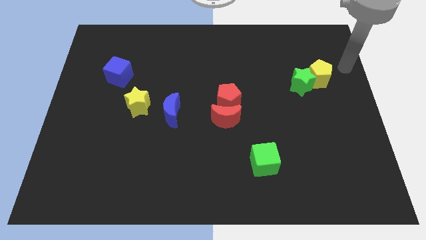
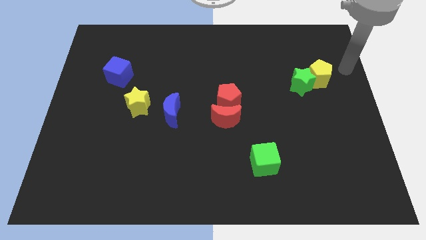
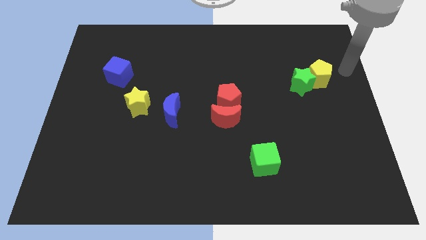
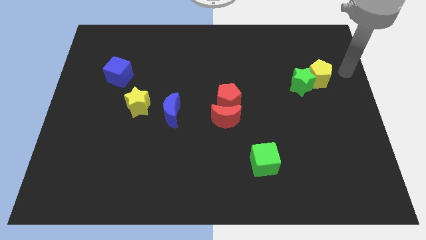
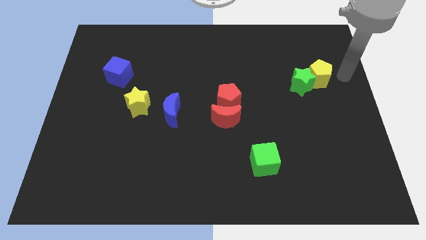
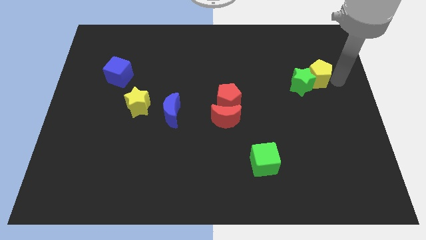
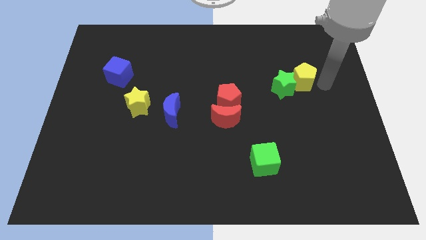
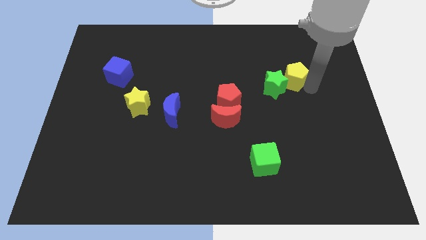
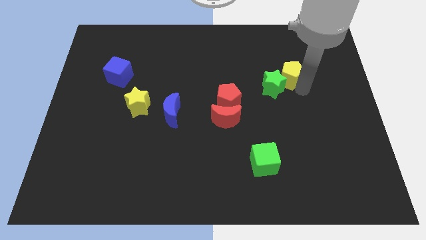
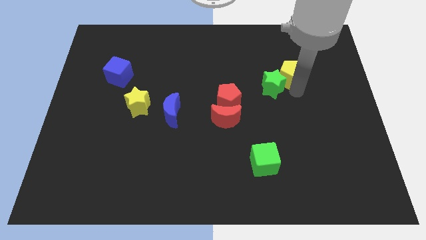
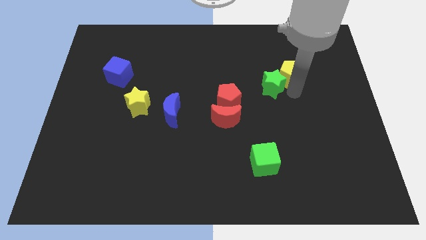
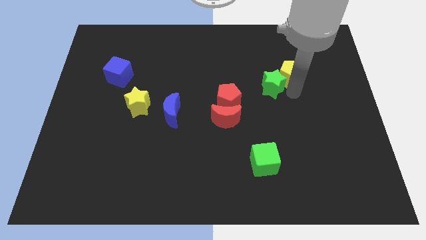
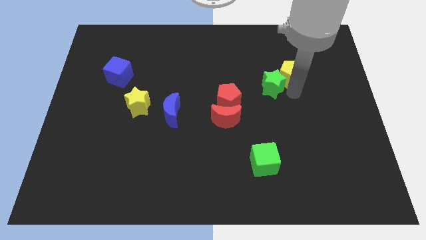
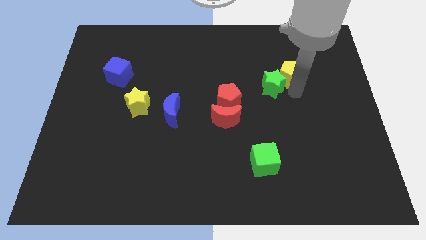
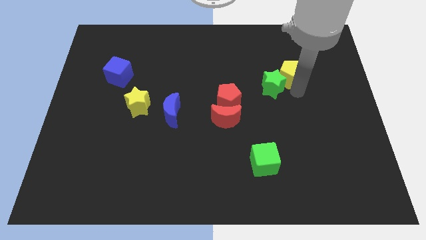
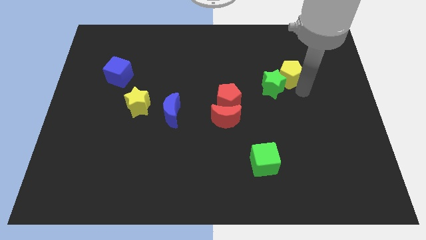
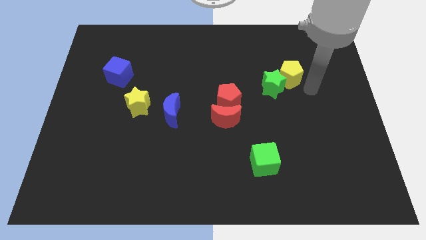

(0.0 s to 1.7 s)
push the yellow pentagon with the green star

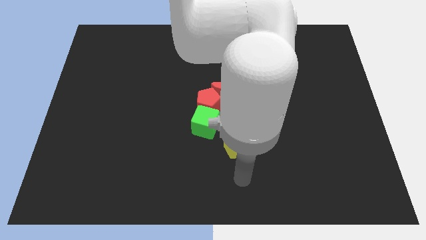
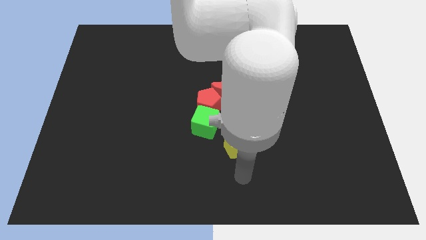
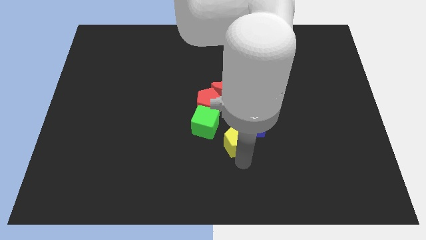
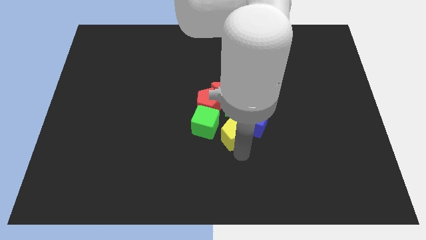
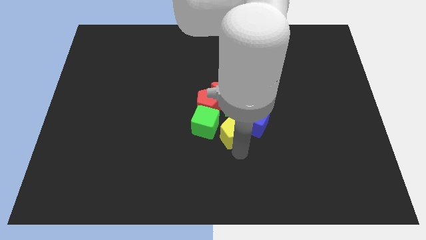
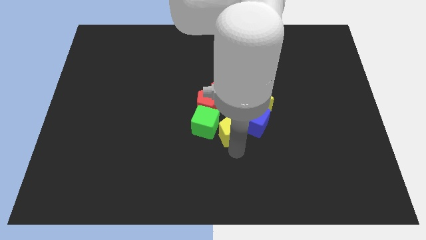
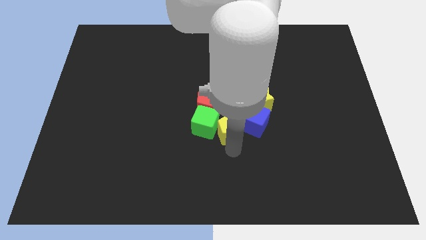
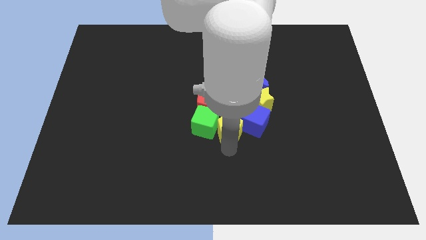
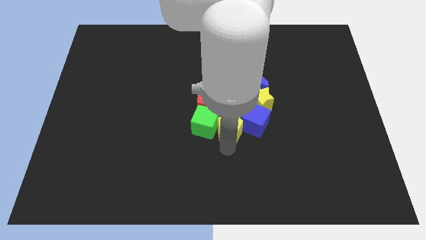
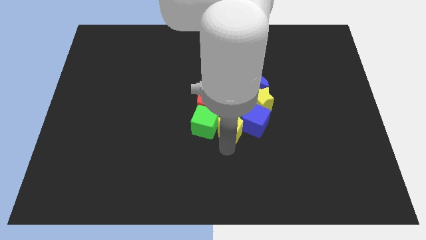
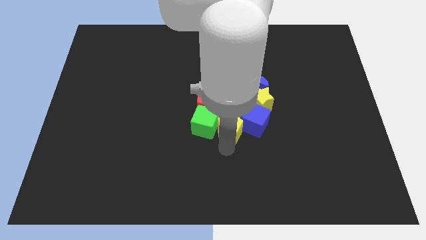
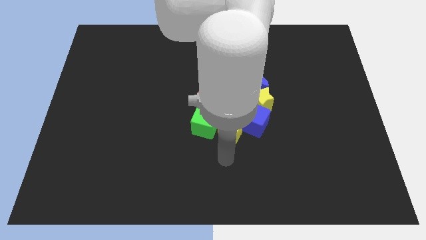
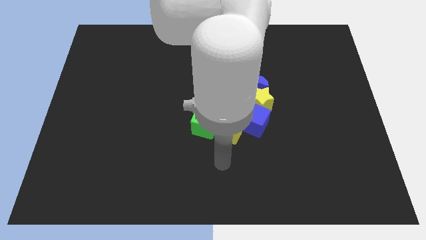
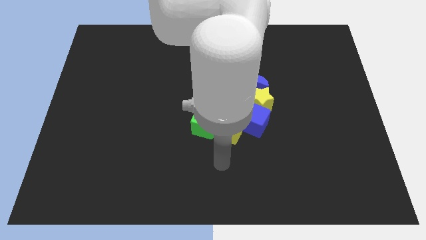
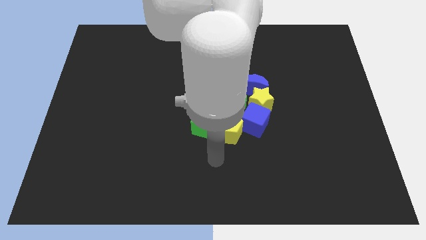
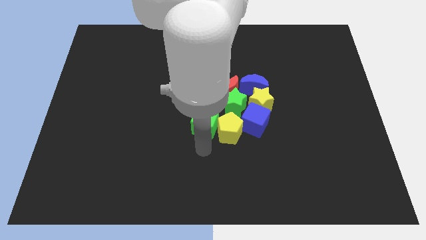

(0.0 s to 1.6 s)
move the yellow pentagon below the green star

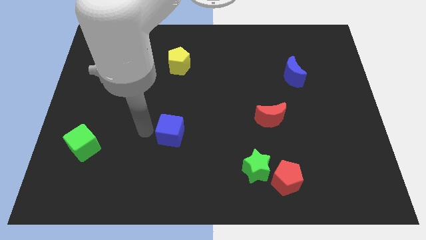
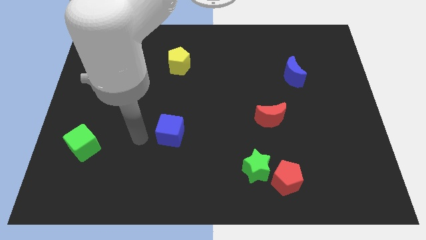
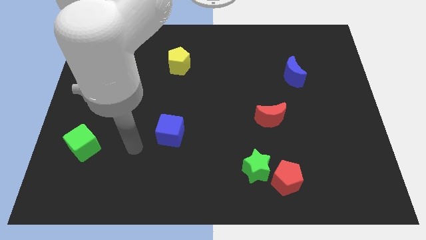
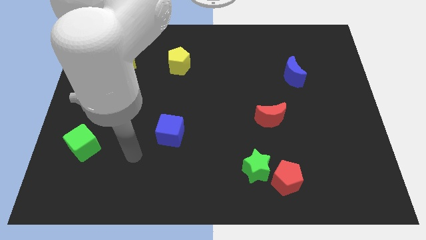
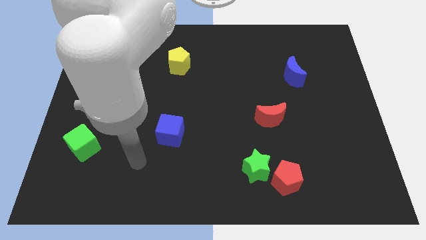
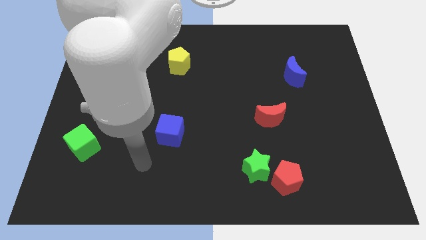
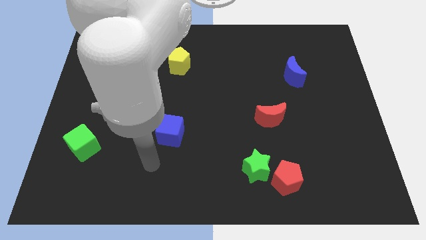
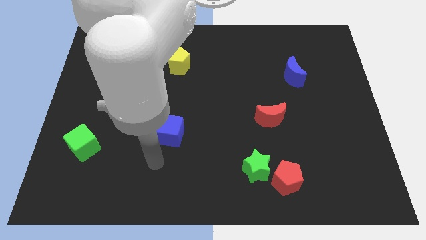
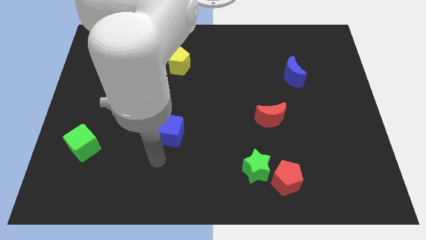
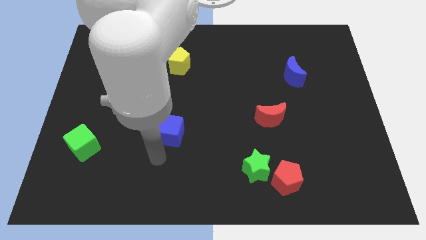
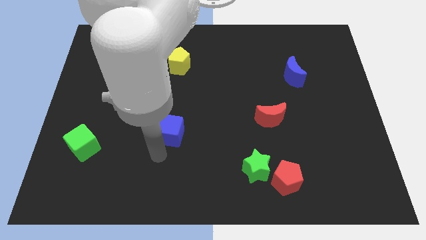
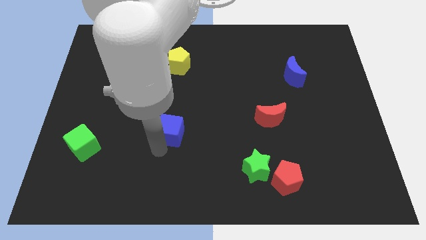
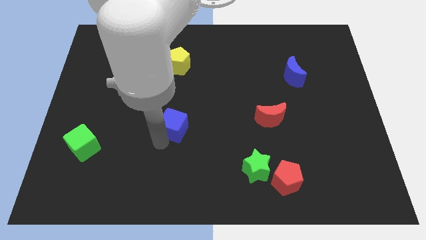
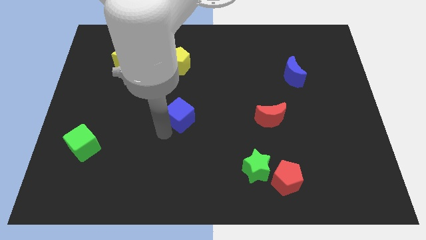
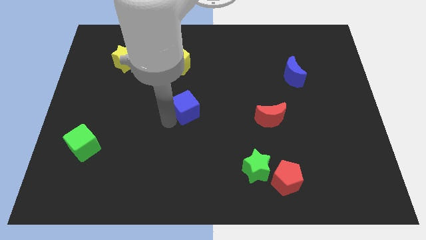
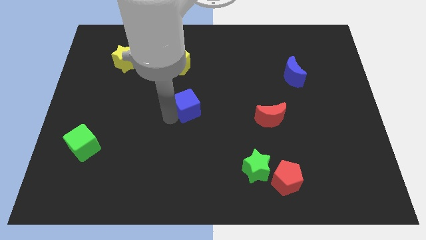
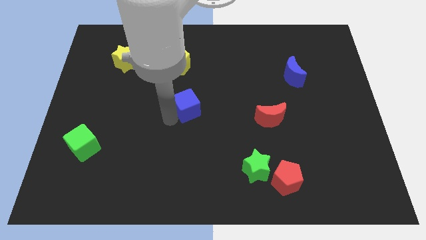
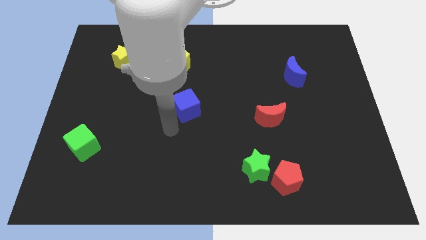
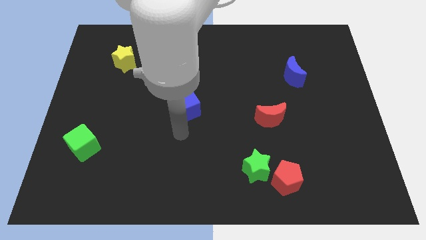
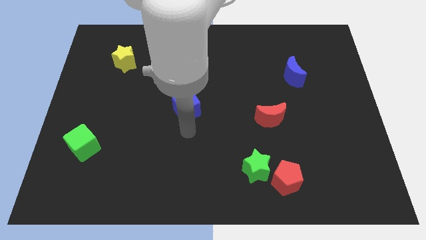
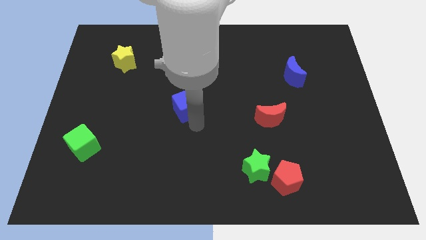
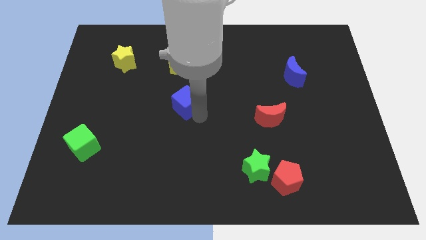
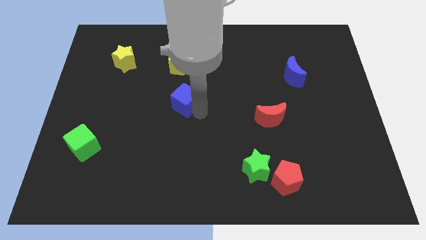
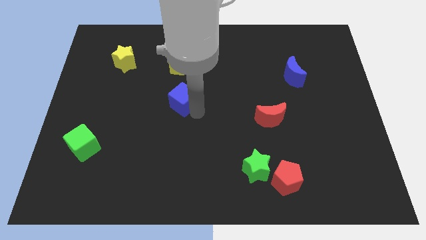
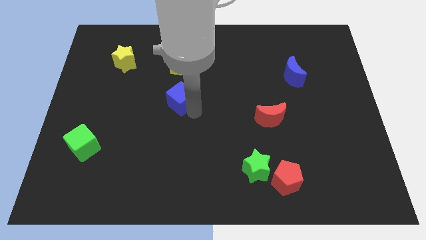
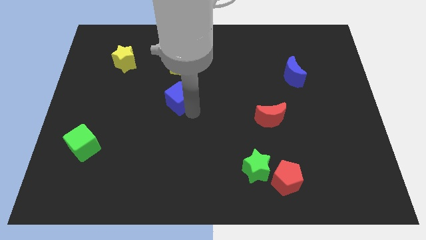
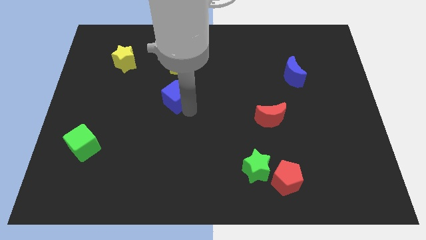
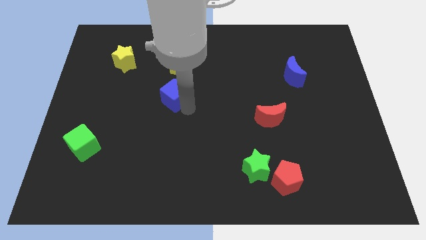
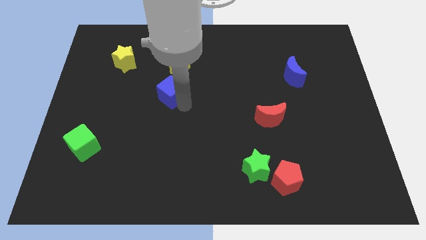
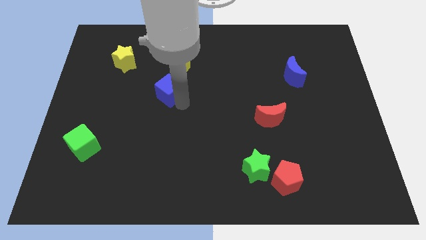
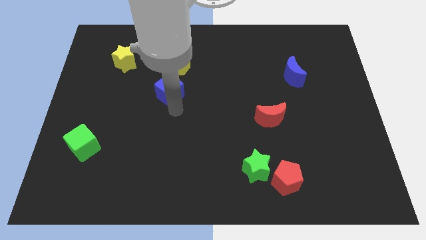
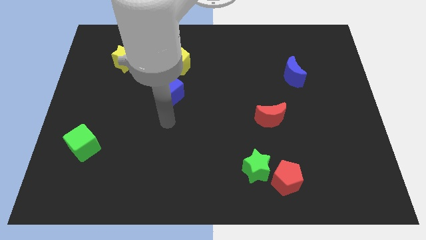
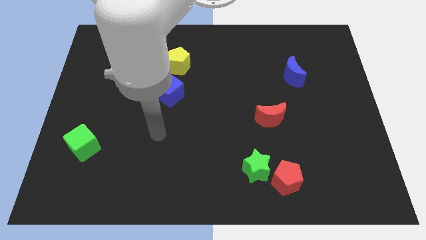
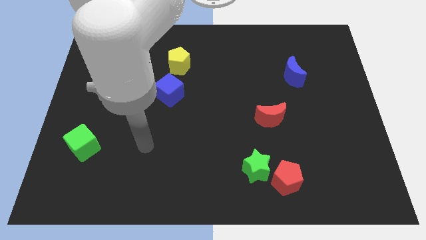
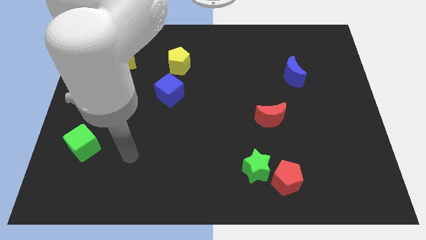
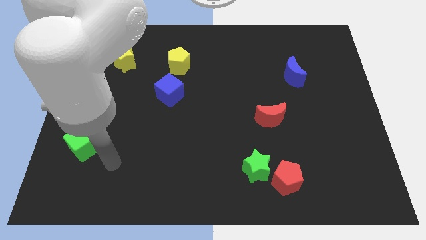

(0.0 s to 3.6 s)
place the blue cube below the yellow pentagon

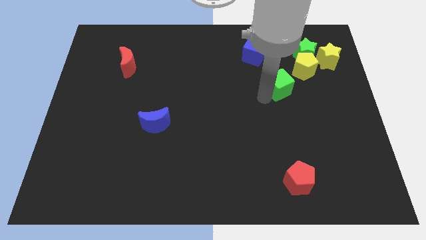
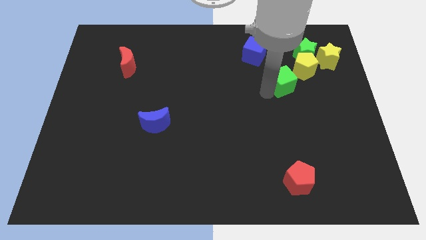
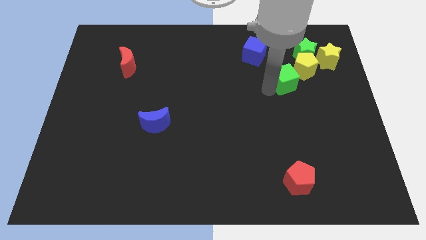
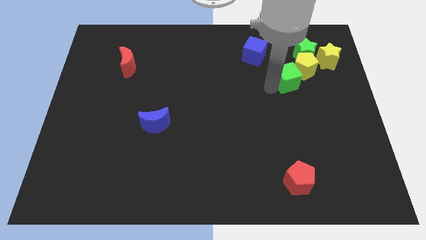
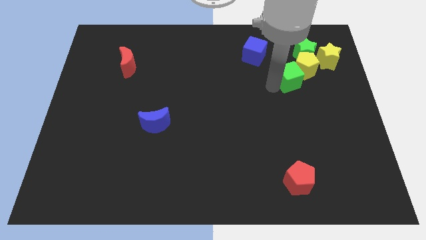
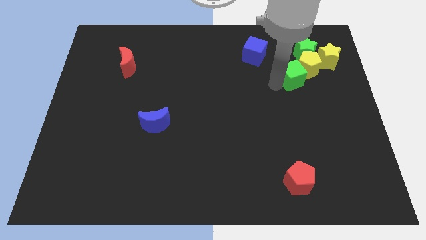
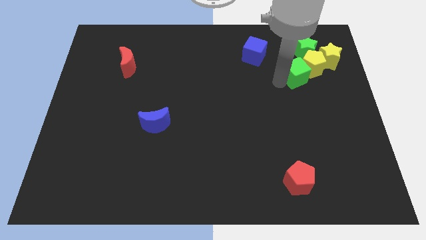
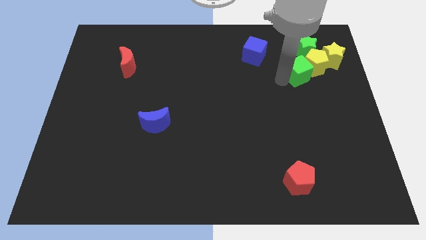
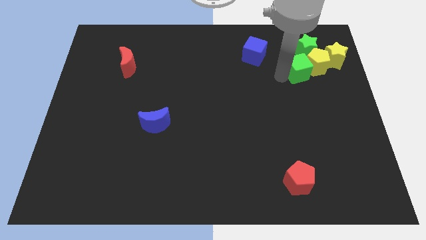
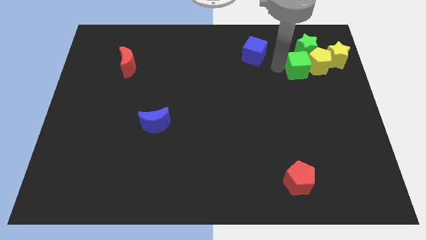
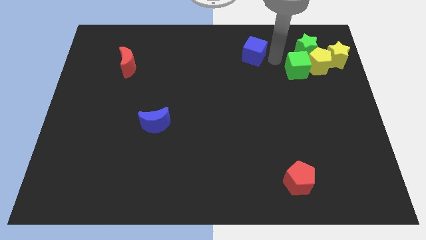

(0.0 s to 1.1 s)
add the green cube to the group of both the yellow blocks and green star

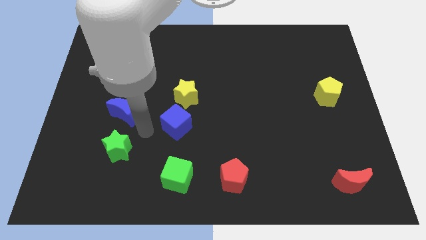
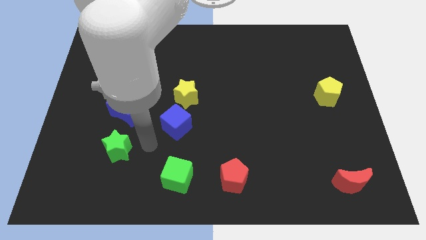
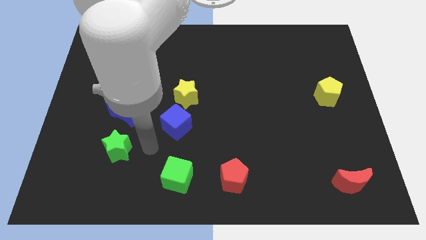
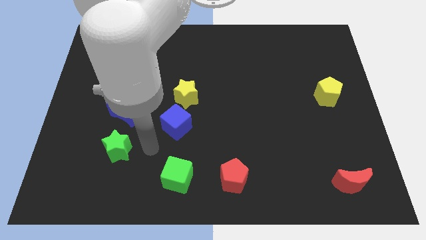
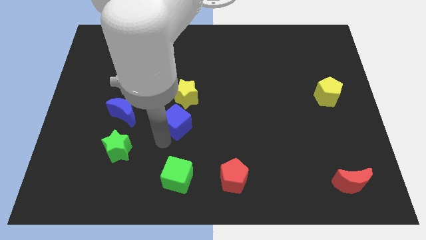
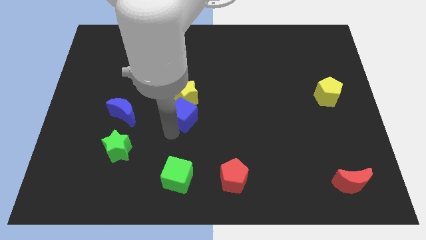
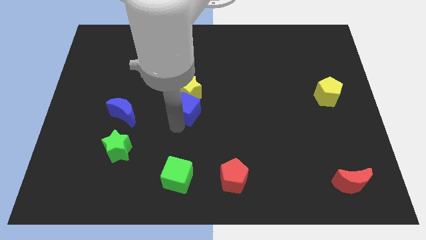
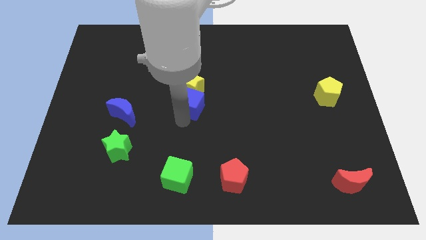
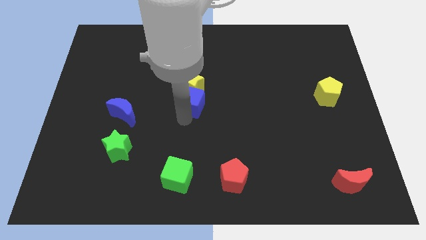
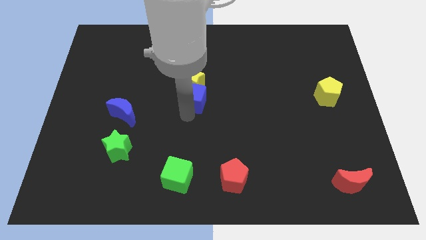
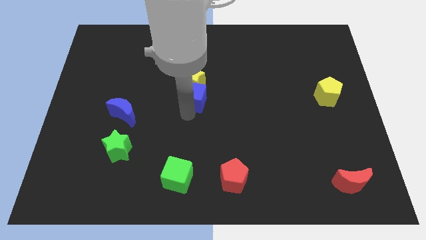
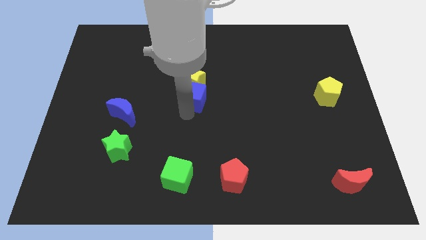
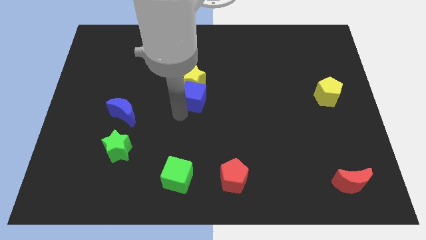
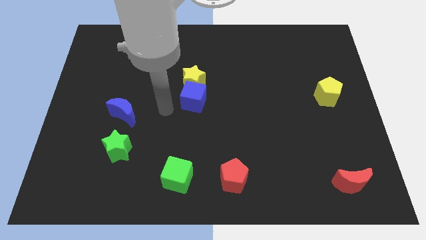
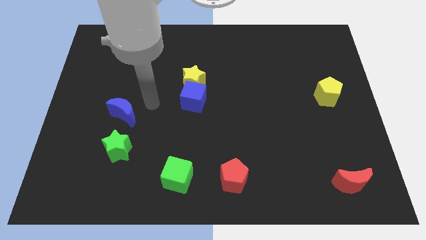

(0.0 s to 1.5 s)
drag the blue cube and yellow star together to the top side of the board
